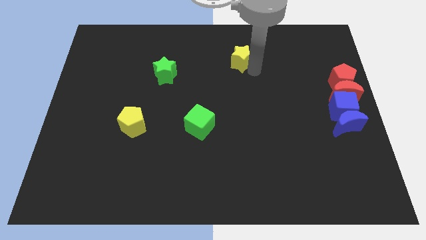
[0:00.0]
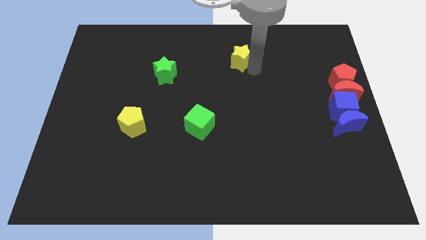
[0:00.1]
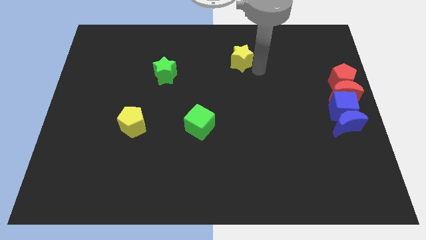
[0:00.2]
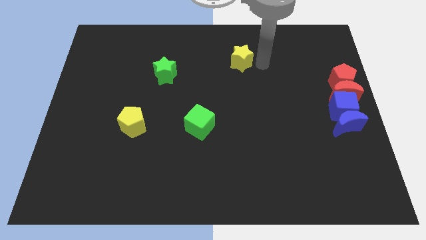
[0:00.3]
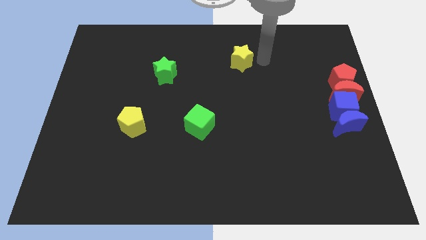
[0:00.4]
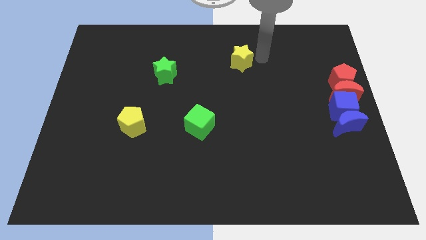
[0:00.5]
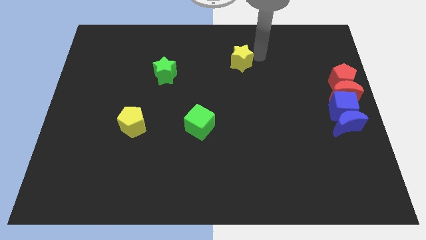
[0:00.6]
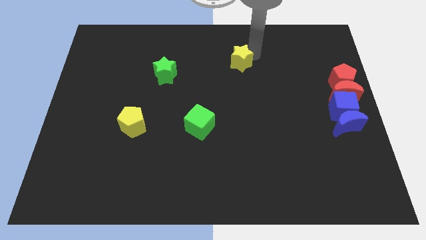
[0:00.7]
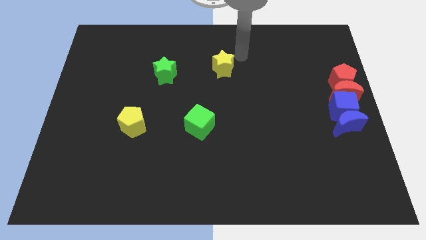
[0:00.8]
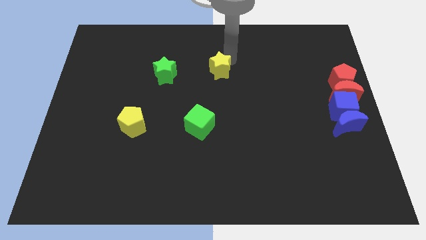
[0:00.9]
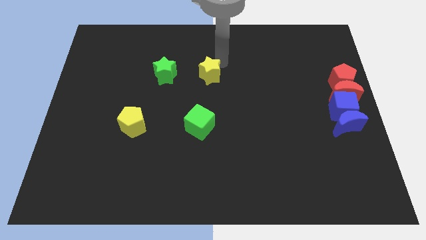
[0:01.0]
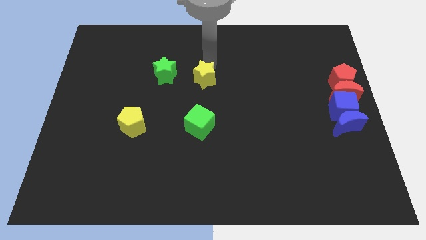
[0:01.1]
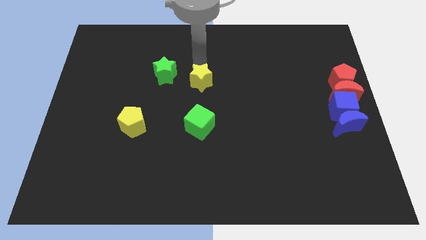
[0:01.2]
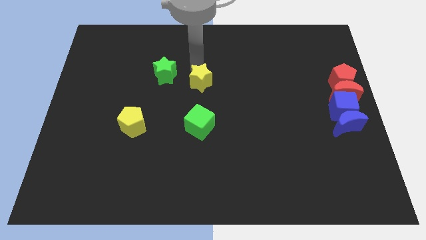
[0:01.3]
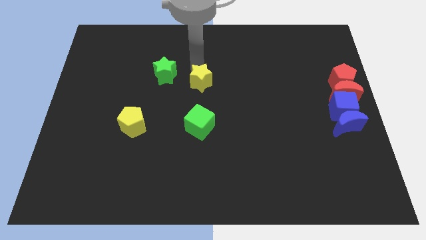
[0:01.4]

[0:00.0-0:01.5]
push the yellow star to the right of the green star

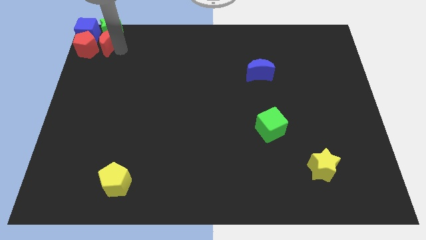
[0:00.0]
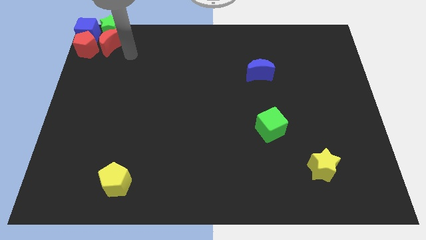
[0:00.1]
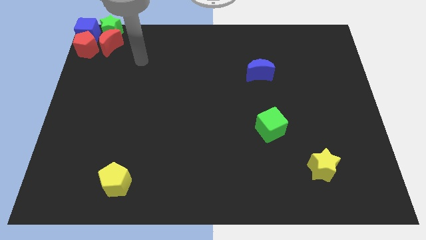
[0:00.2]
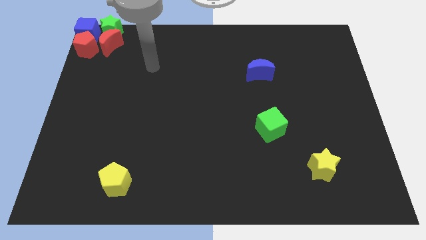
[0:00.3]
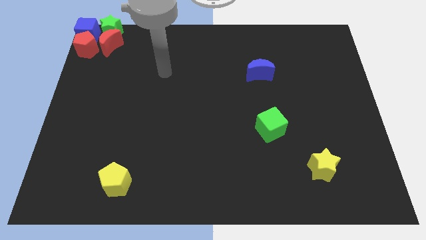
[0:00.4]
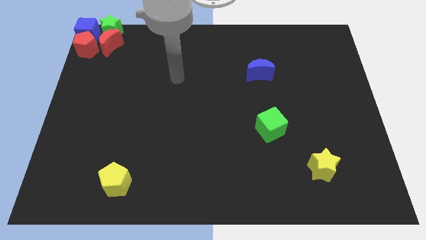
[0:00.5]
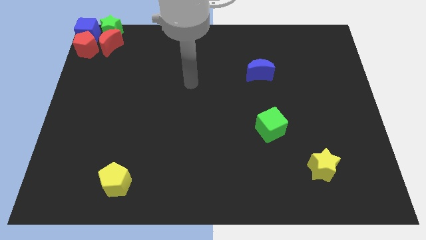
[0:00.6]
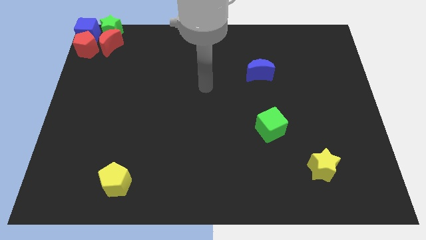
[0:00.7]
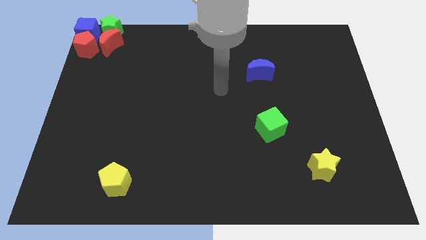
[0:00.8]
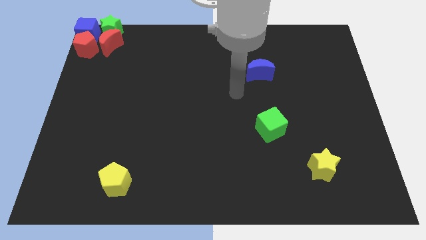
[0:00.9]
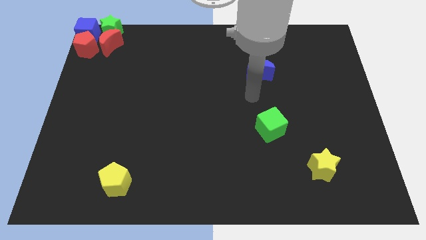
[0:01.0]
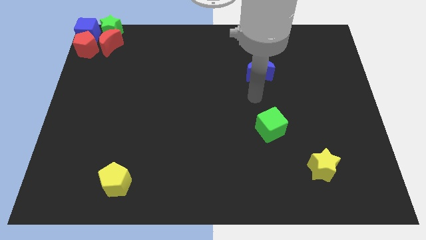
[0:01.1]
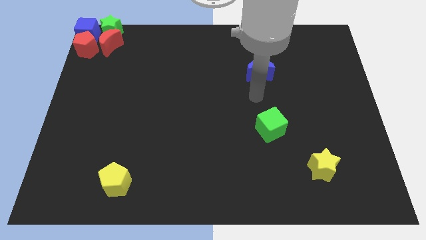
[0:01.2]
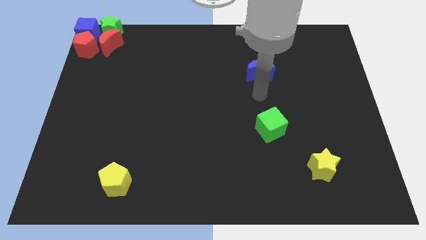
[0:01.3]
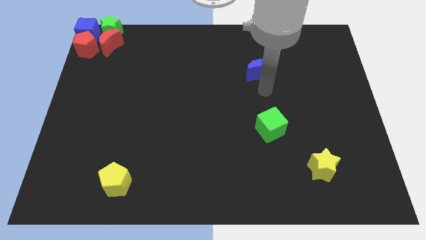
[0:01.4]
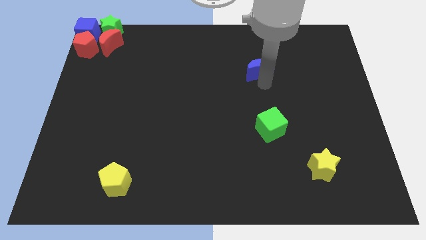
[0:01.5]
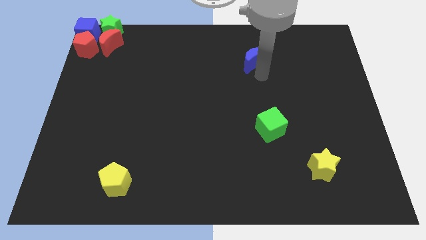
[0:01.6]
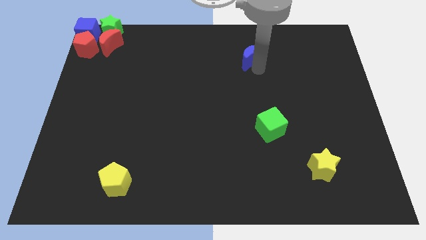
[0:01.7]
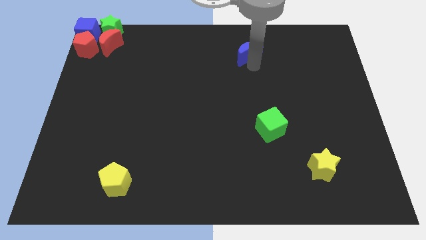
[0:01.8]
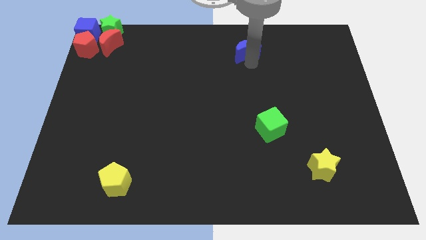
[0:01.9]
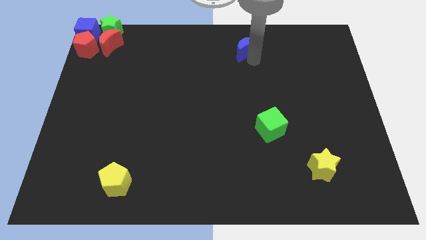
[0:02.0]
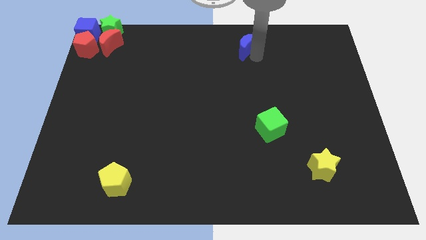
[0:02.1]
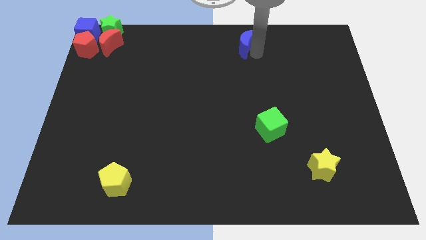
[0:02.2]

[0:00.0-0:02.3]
move the blue crescent to the top side of the board

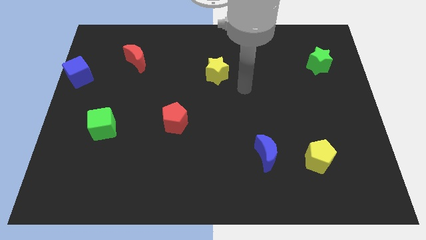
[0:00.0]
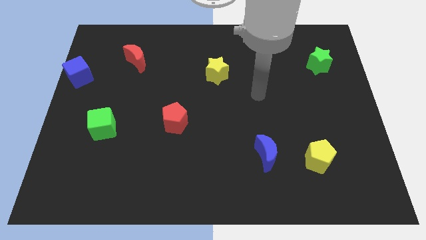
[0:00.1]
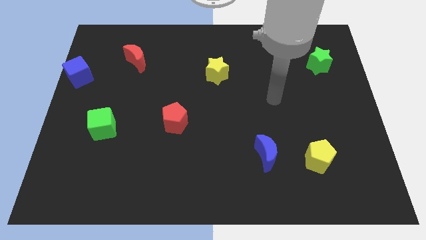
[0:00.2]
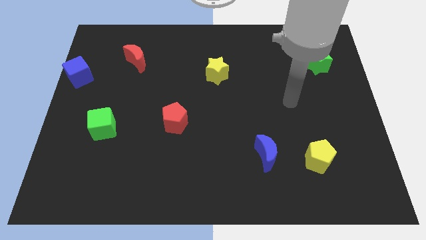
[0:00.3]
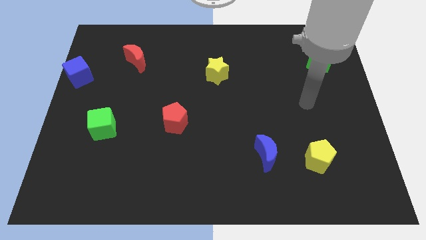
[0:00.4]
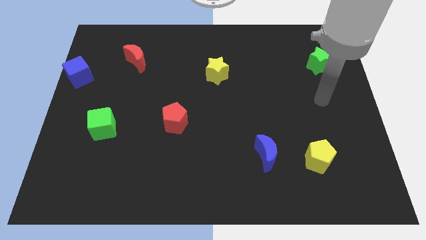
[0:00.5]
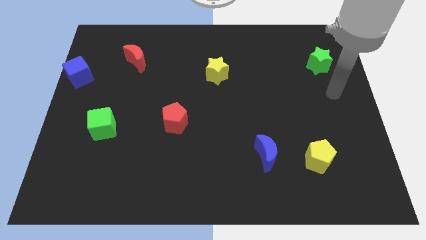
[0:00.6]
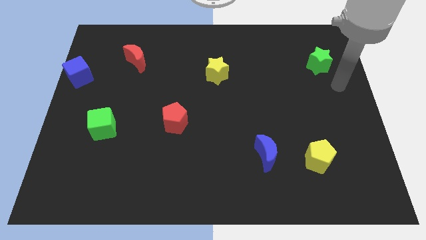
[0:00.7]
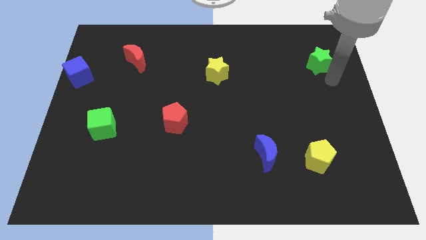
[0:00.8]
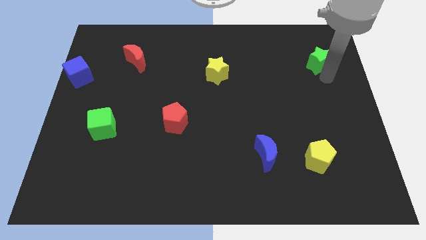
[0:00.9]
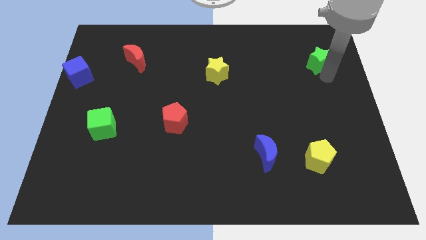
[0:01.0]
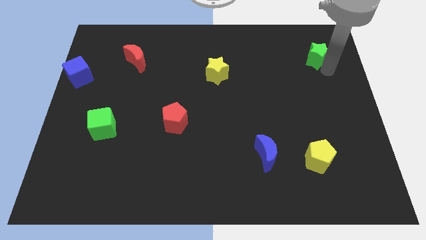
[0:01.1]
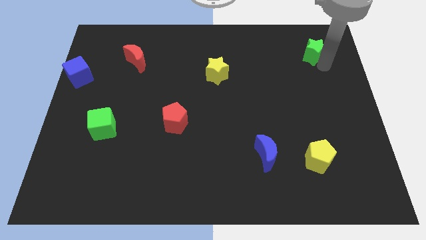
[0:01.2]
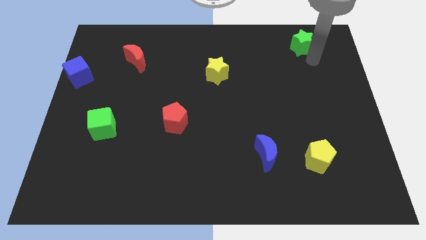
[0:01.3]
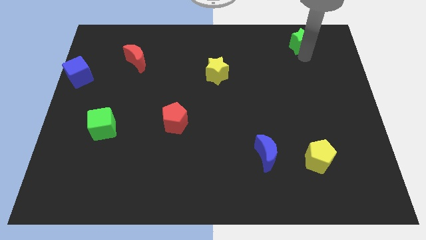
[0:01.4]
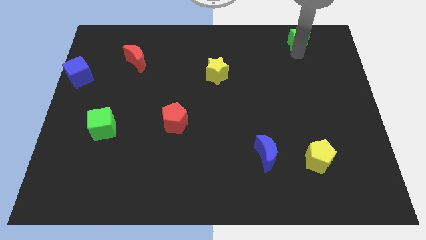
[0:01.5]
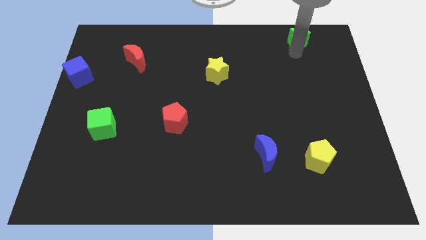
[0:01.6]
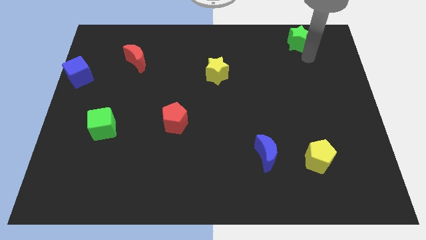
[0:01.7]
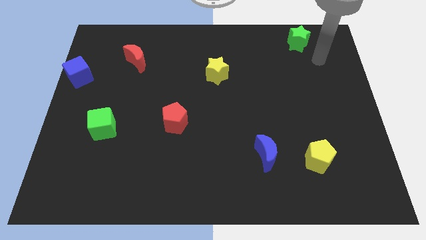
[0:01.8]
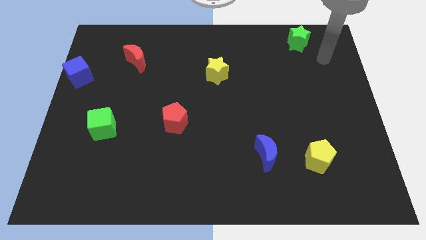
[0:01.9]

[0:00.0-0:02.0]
move the green star towards top right side

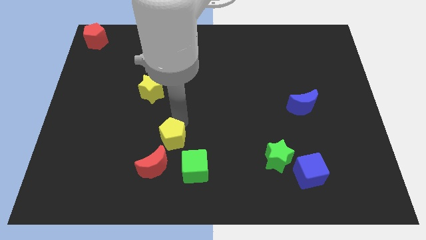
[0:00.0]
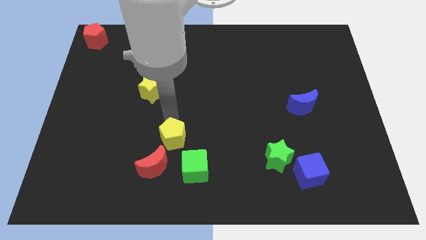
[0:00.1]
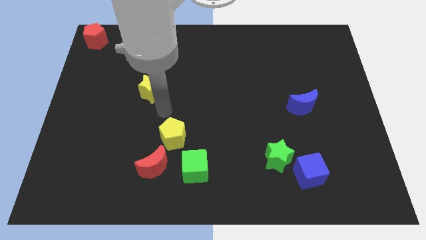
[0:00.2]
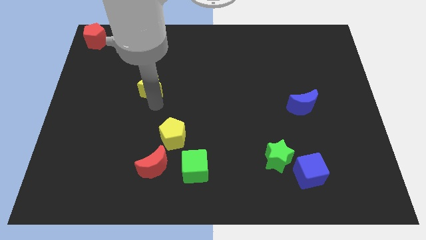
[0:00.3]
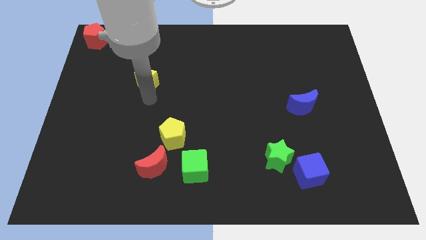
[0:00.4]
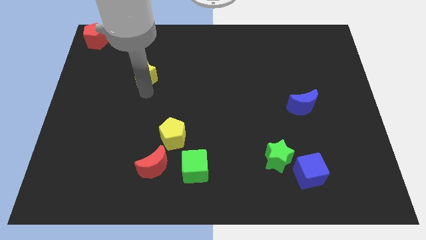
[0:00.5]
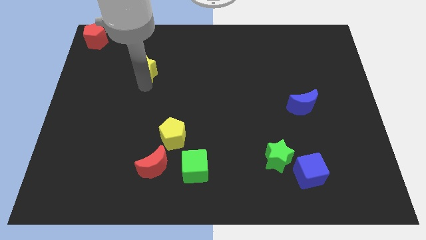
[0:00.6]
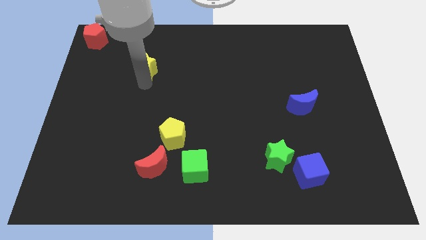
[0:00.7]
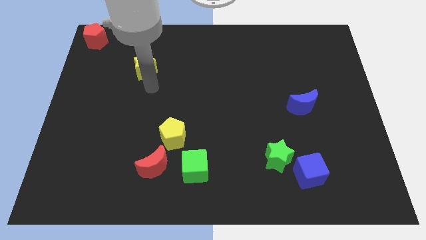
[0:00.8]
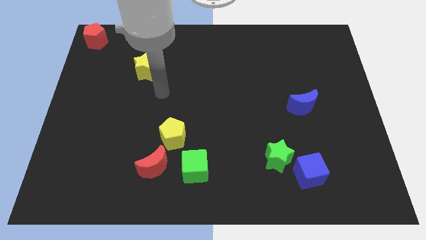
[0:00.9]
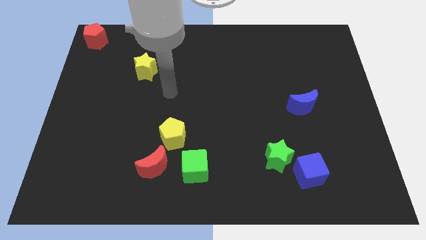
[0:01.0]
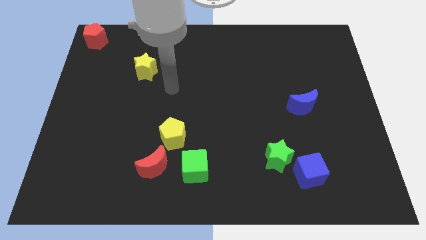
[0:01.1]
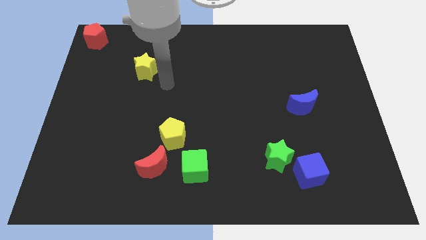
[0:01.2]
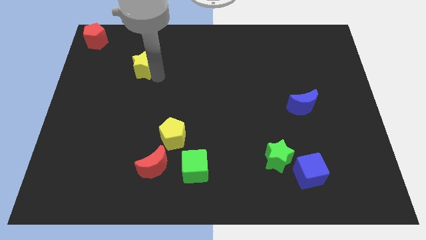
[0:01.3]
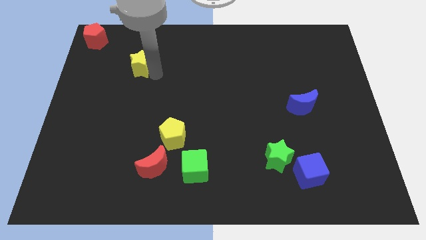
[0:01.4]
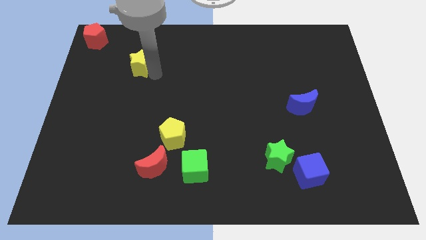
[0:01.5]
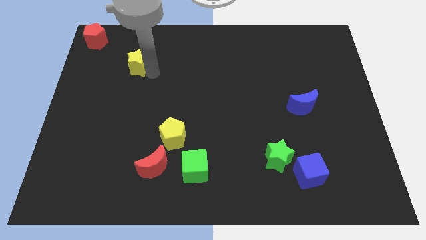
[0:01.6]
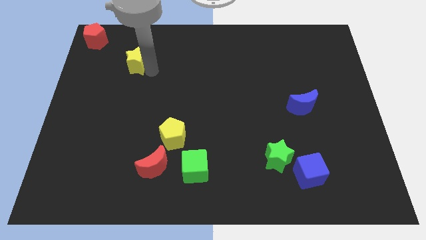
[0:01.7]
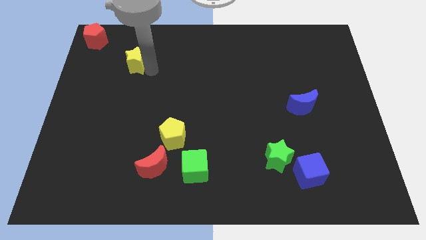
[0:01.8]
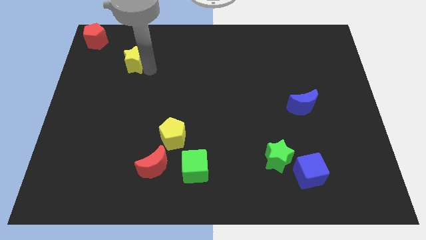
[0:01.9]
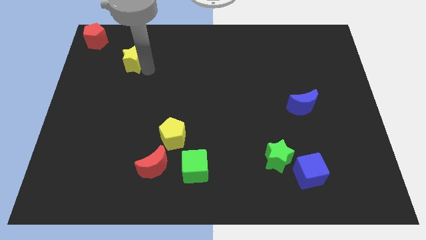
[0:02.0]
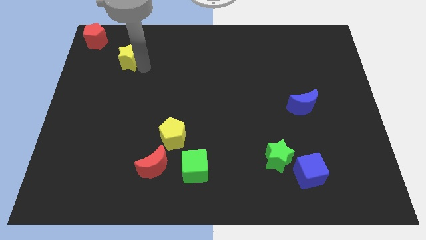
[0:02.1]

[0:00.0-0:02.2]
move the yellow star to the bottom right side of the red pentagon

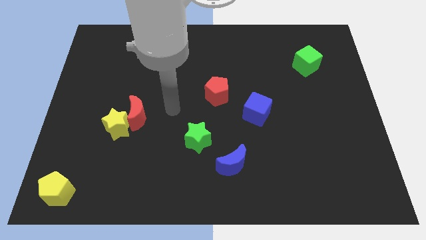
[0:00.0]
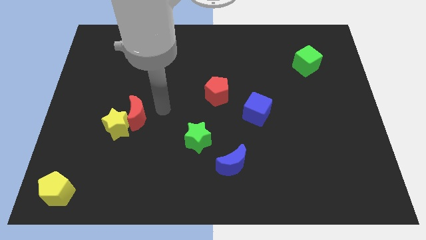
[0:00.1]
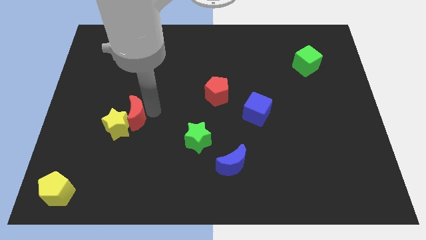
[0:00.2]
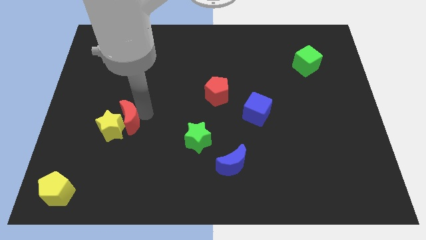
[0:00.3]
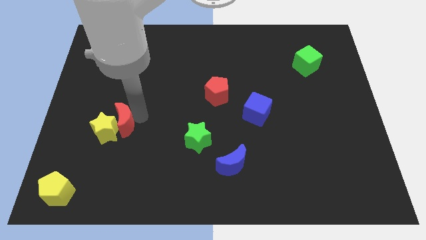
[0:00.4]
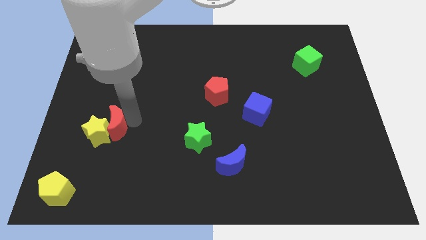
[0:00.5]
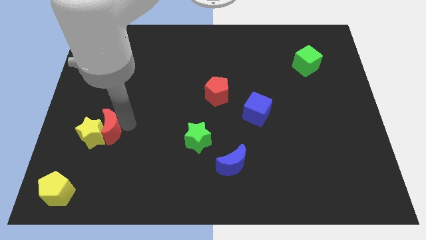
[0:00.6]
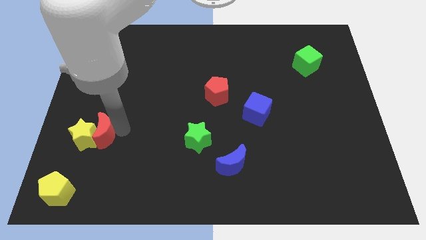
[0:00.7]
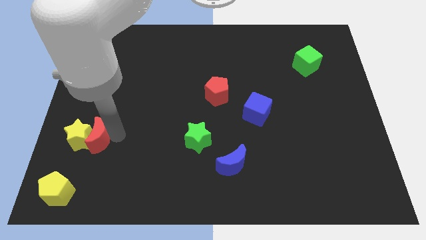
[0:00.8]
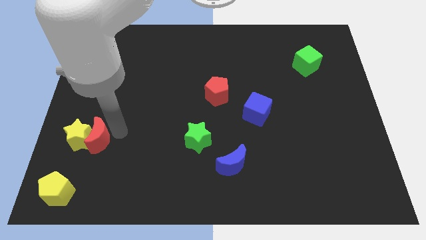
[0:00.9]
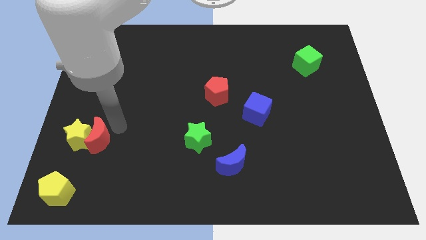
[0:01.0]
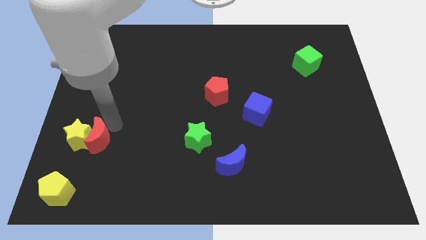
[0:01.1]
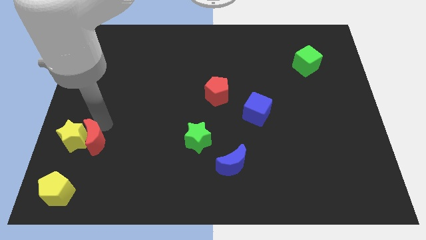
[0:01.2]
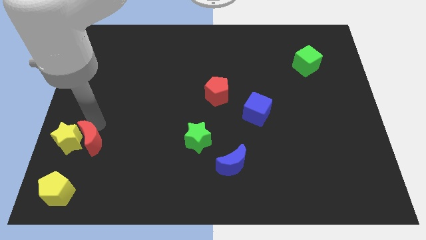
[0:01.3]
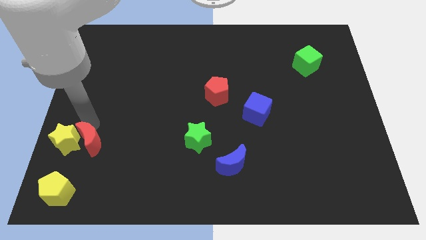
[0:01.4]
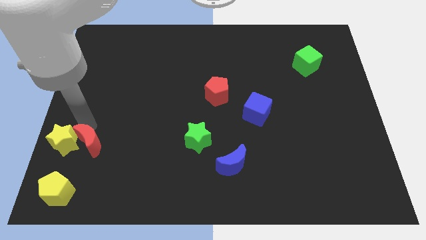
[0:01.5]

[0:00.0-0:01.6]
place the yellow star and red moon above the yellow pentagon
